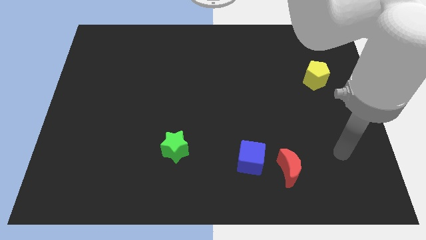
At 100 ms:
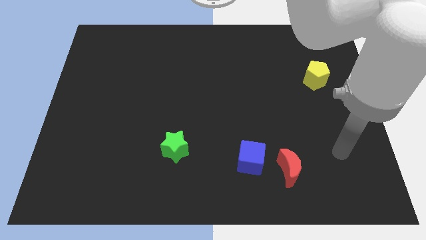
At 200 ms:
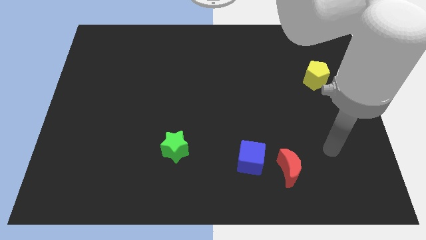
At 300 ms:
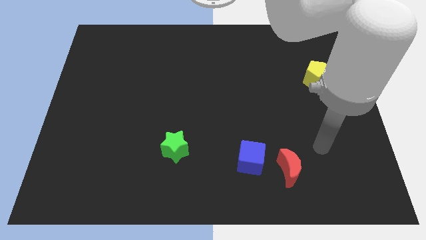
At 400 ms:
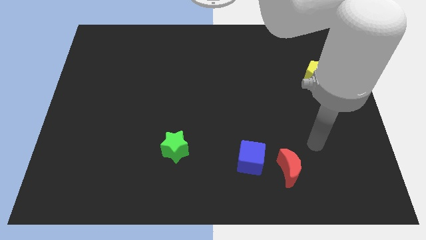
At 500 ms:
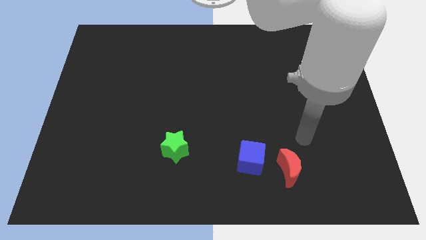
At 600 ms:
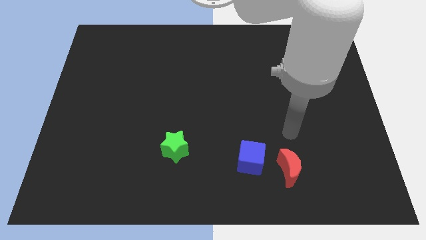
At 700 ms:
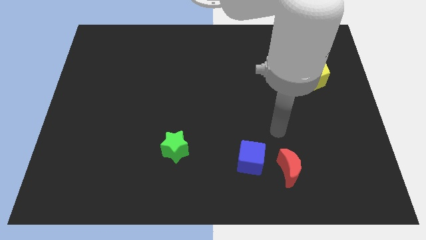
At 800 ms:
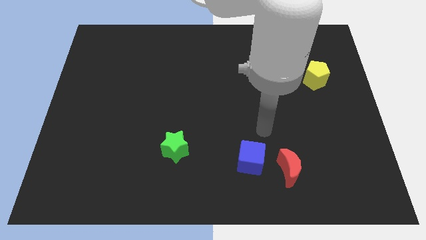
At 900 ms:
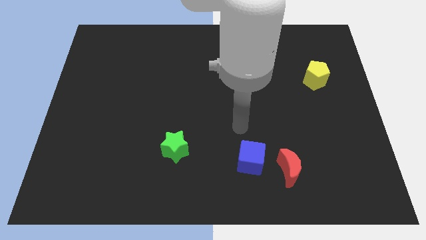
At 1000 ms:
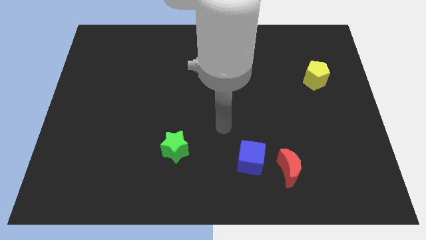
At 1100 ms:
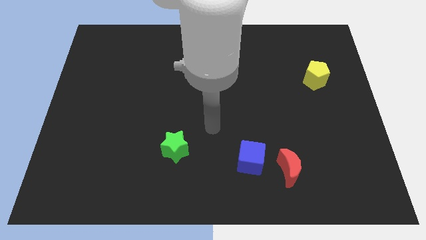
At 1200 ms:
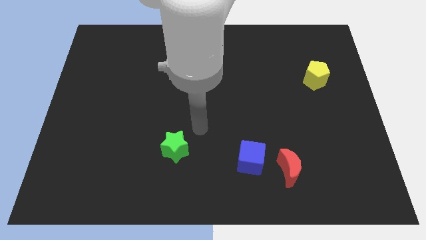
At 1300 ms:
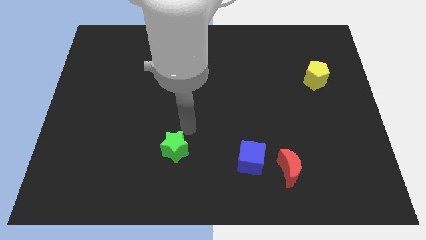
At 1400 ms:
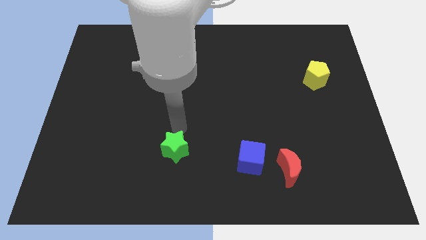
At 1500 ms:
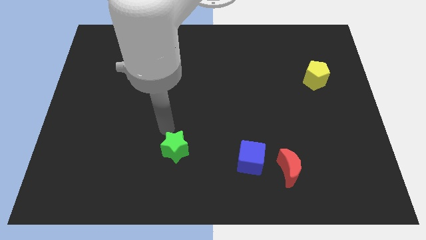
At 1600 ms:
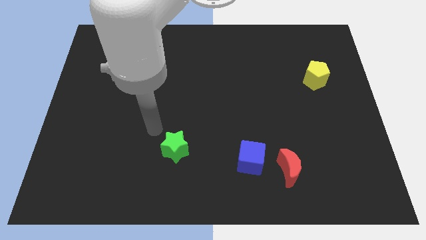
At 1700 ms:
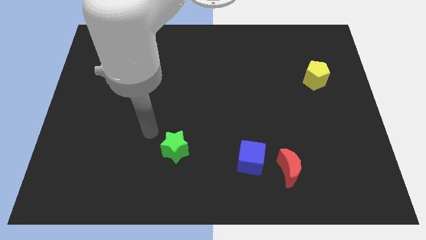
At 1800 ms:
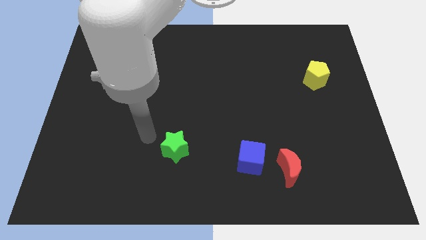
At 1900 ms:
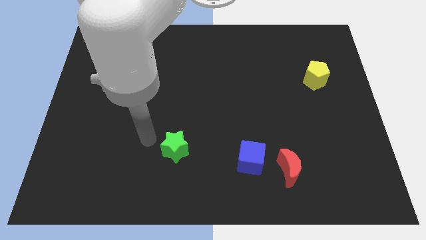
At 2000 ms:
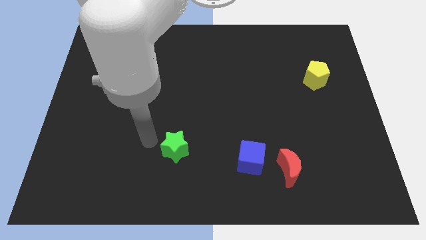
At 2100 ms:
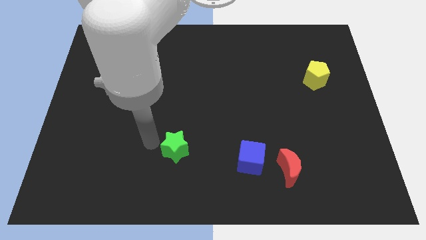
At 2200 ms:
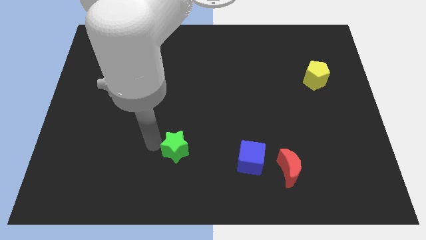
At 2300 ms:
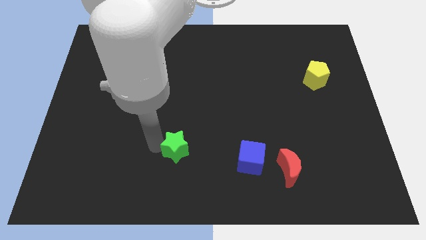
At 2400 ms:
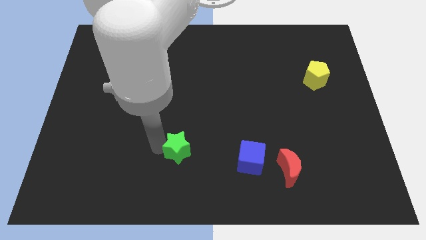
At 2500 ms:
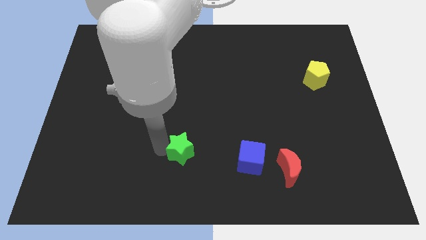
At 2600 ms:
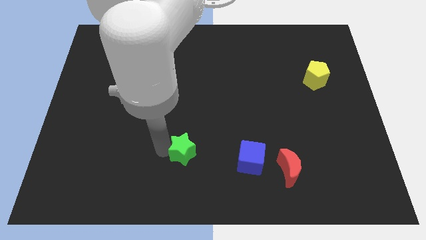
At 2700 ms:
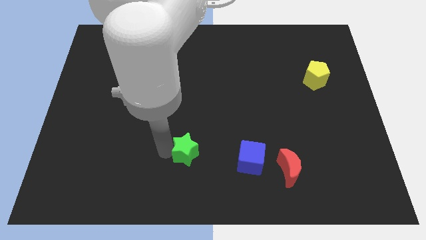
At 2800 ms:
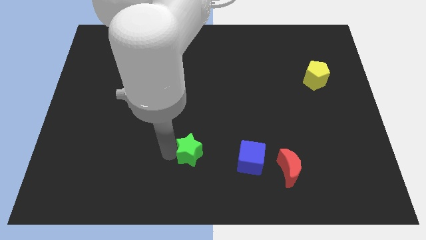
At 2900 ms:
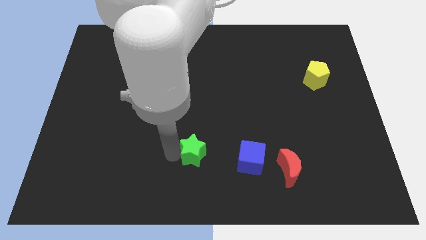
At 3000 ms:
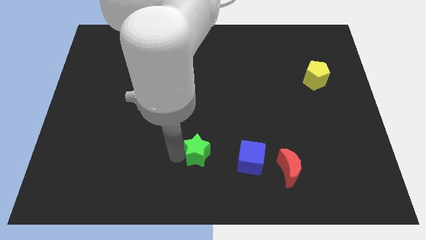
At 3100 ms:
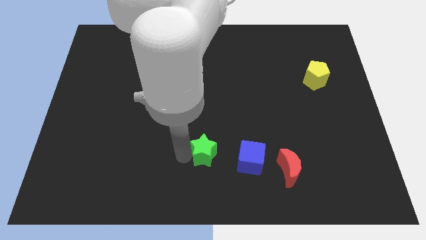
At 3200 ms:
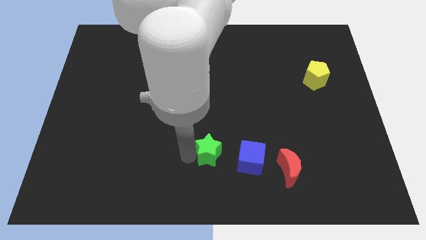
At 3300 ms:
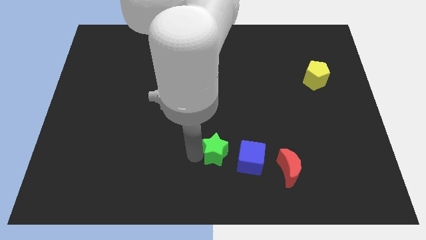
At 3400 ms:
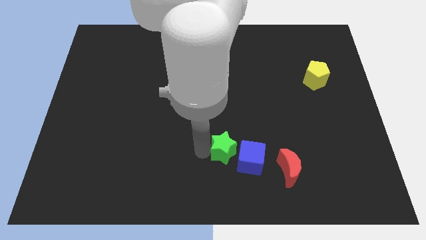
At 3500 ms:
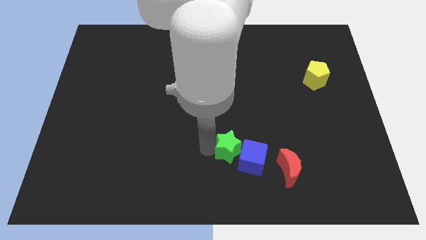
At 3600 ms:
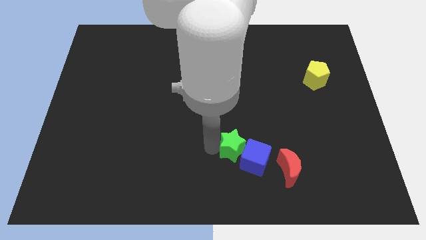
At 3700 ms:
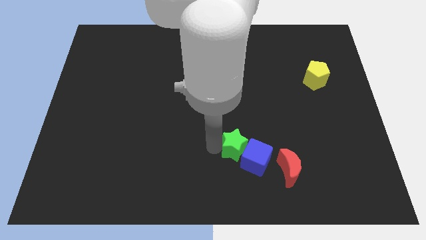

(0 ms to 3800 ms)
slide the green block next to the blue block

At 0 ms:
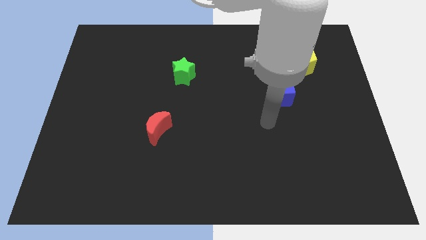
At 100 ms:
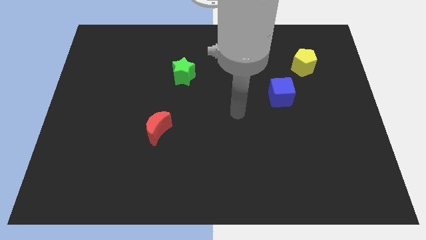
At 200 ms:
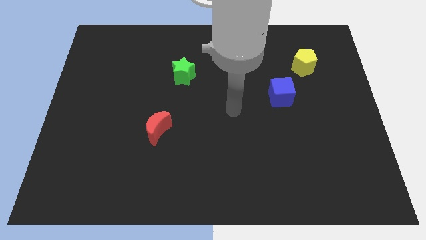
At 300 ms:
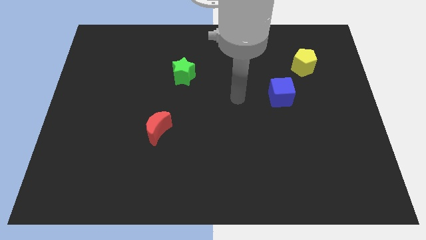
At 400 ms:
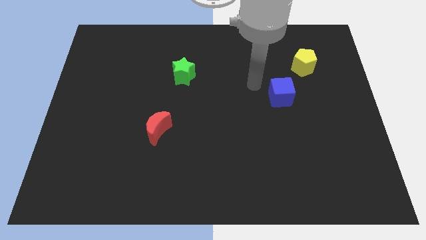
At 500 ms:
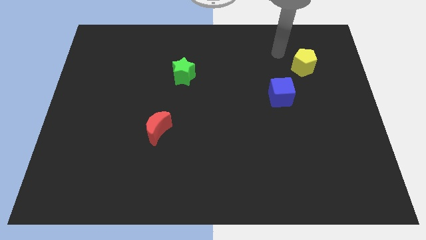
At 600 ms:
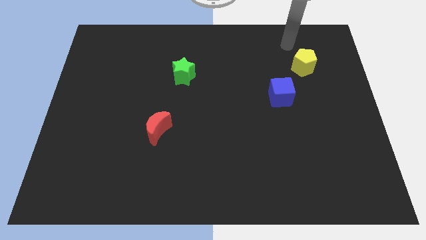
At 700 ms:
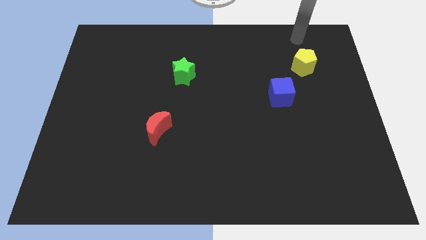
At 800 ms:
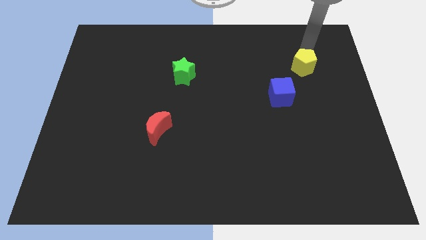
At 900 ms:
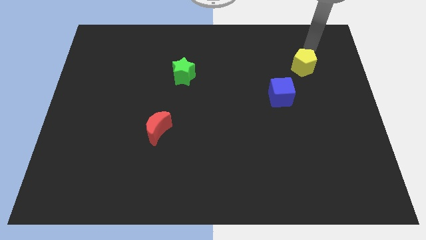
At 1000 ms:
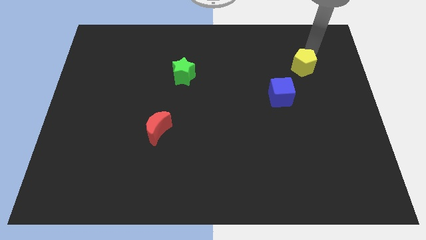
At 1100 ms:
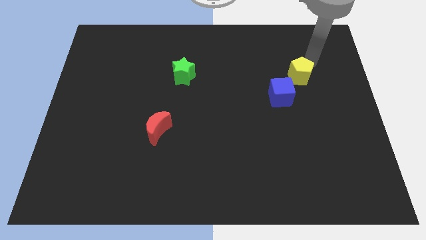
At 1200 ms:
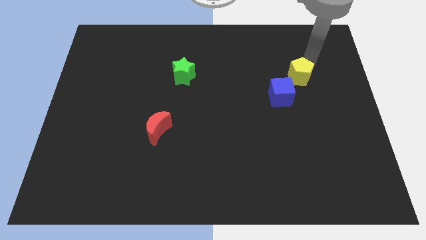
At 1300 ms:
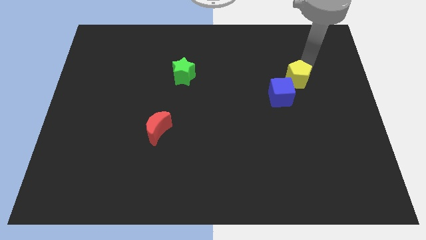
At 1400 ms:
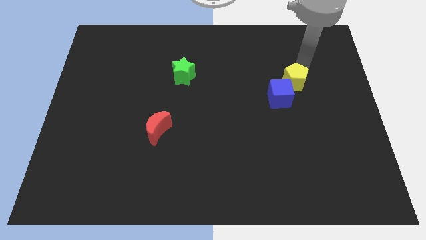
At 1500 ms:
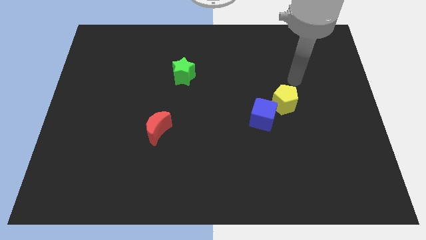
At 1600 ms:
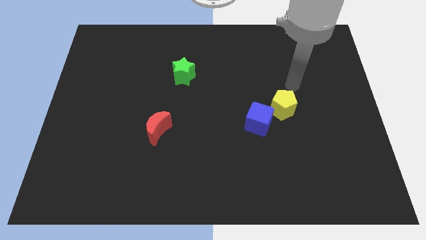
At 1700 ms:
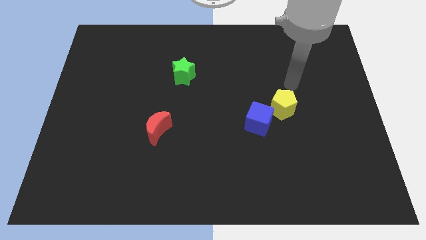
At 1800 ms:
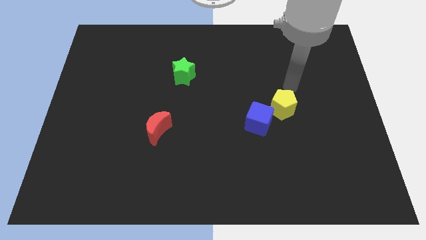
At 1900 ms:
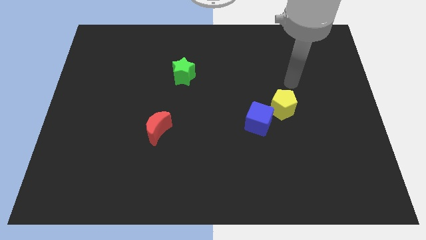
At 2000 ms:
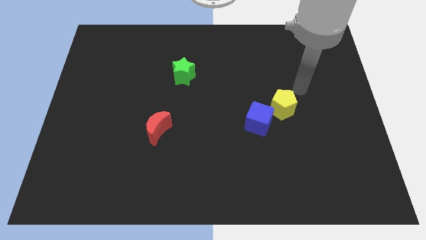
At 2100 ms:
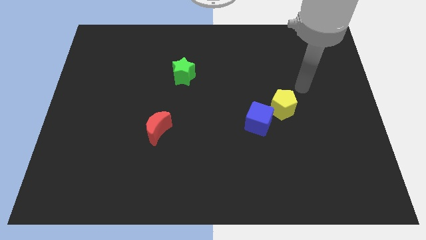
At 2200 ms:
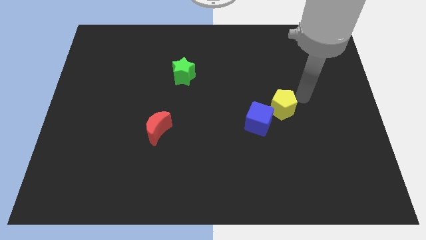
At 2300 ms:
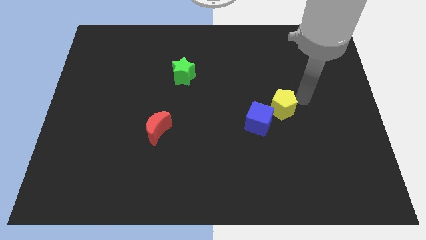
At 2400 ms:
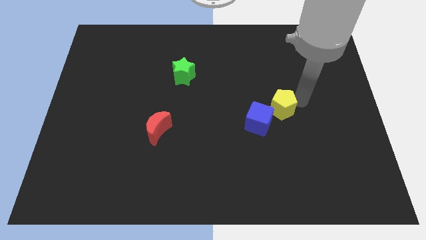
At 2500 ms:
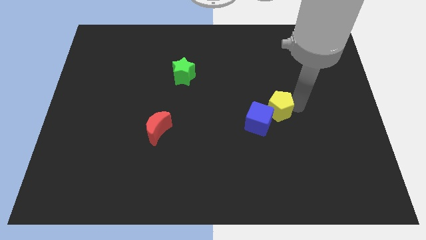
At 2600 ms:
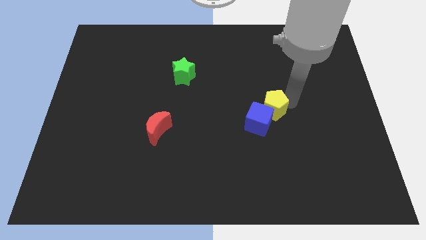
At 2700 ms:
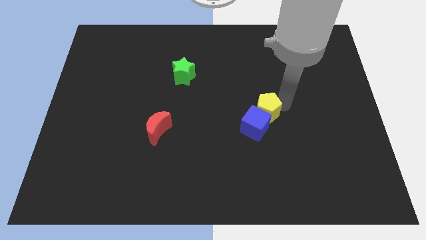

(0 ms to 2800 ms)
put the yellow block to the blue block

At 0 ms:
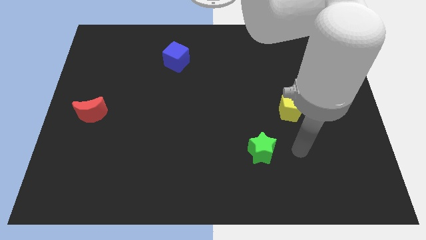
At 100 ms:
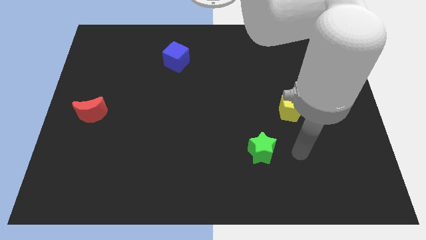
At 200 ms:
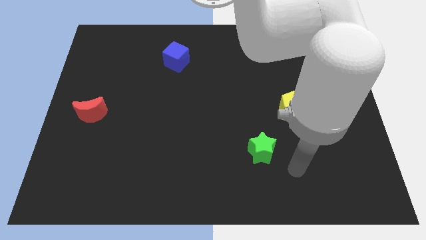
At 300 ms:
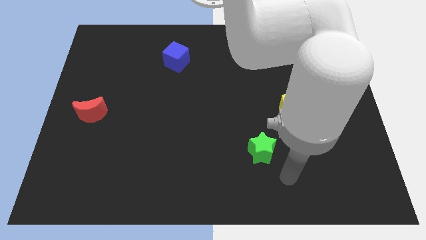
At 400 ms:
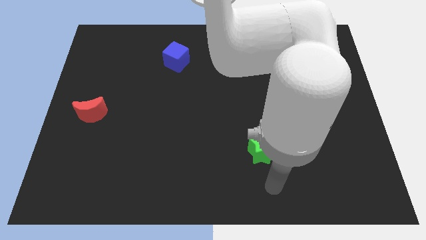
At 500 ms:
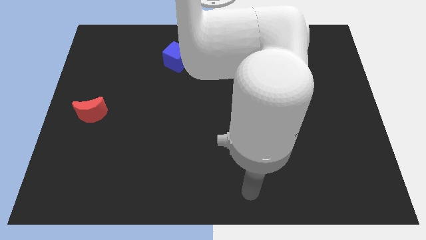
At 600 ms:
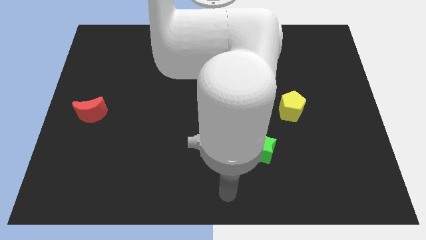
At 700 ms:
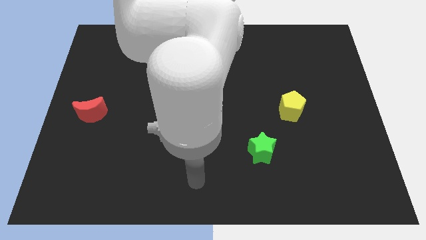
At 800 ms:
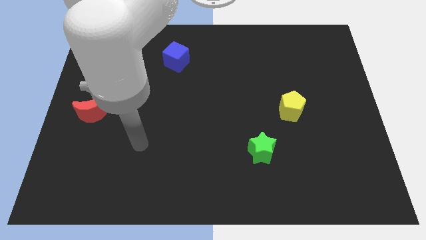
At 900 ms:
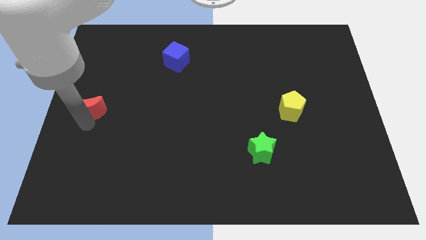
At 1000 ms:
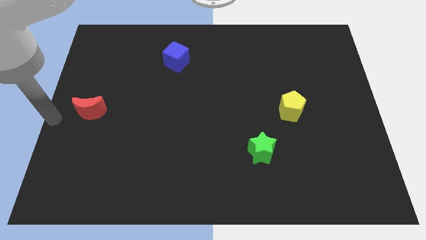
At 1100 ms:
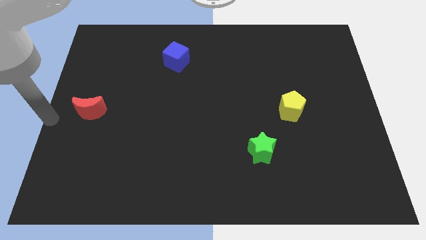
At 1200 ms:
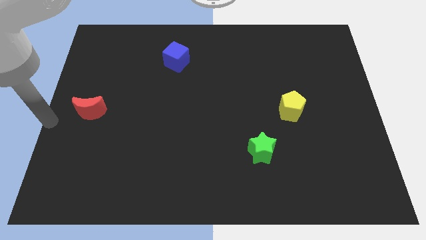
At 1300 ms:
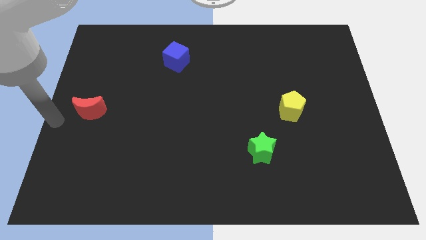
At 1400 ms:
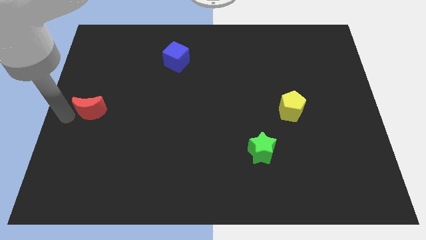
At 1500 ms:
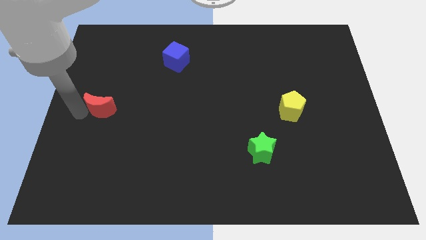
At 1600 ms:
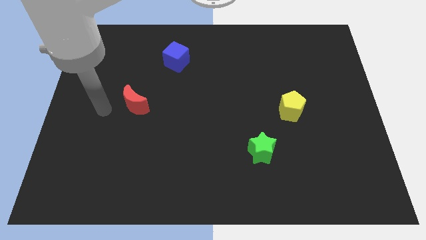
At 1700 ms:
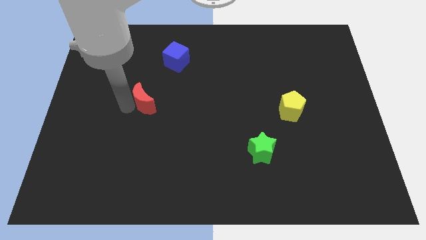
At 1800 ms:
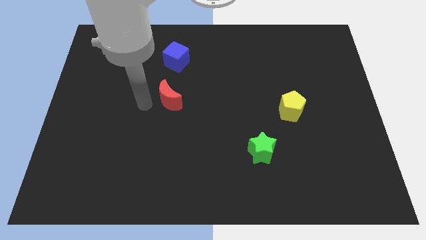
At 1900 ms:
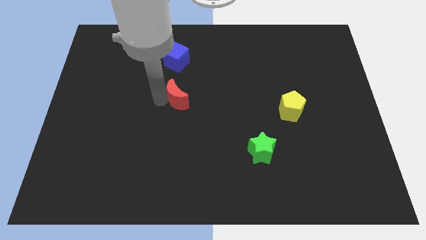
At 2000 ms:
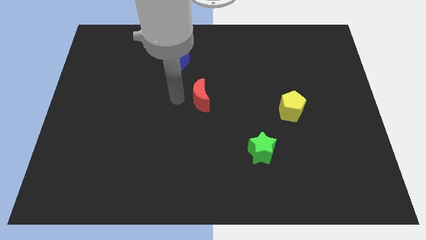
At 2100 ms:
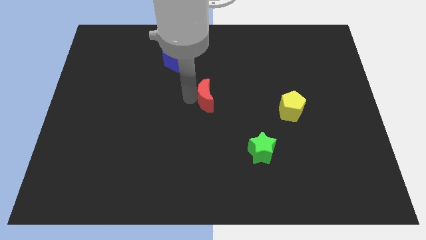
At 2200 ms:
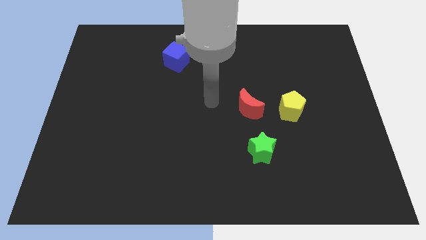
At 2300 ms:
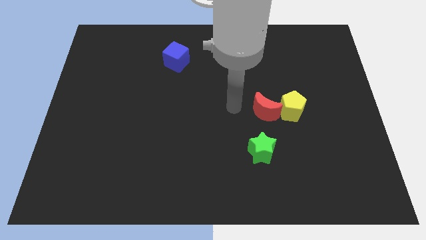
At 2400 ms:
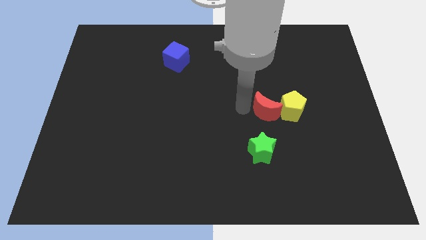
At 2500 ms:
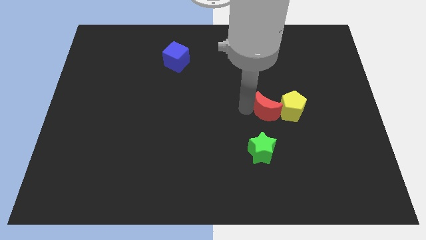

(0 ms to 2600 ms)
put the red block towards the yellow block
